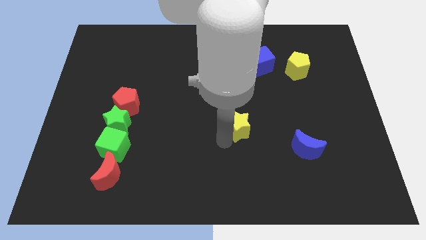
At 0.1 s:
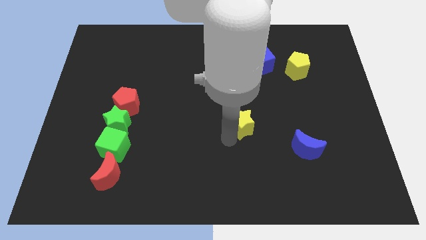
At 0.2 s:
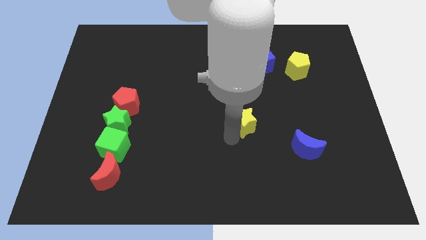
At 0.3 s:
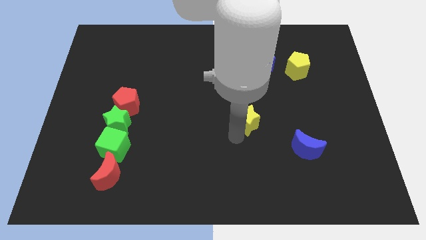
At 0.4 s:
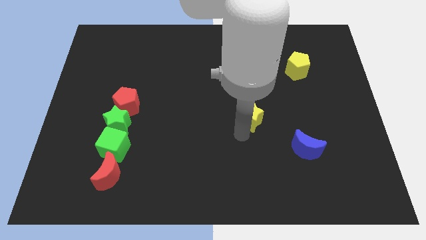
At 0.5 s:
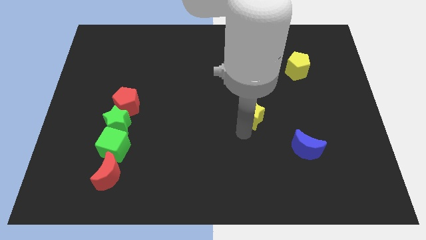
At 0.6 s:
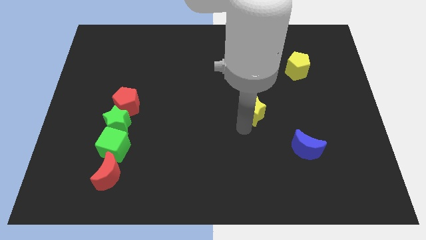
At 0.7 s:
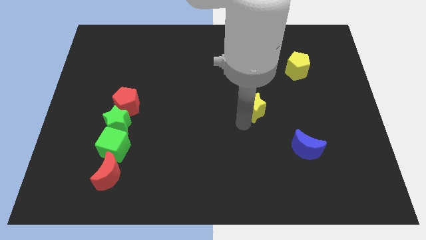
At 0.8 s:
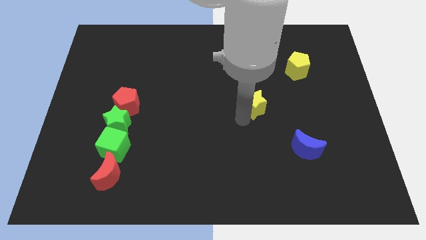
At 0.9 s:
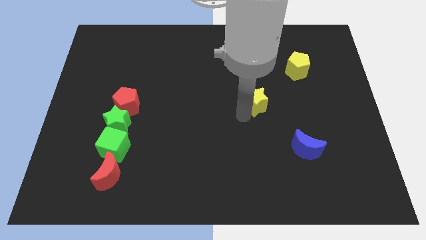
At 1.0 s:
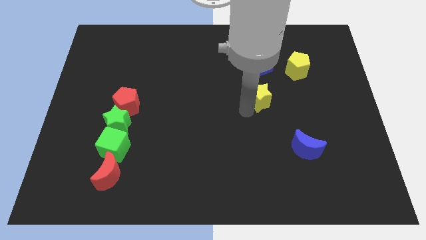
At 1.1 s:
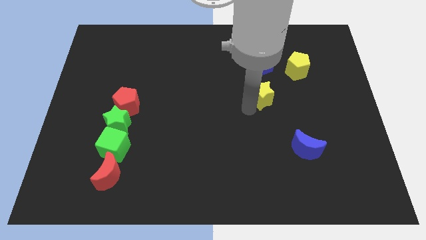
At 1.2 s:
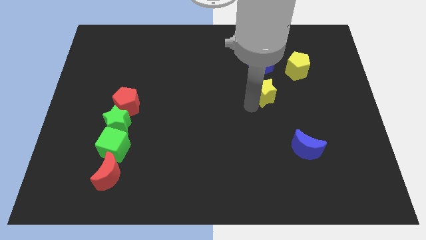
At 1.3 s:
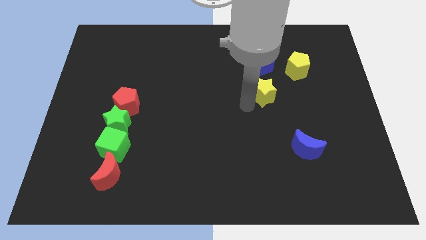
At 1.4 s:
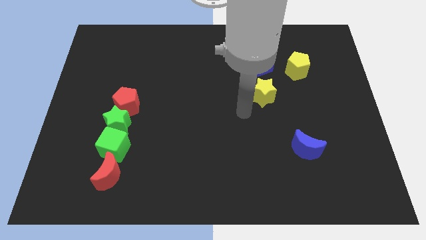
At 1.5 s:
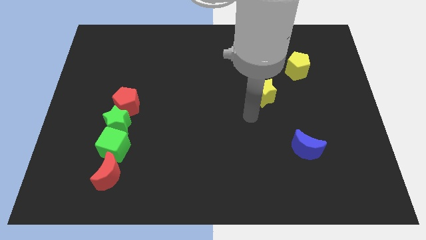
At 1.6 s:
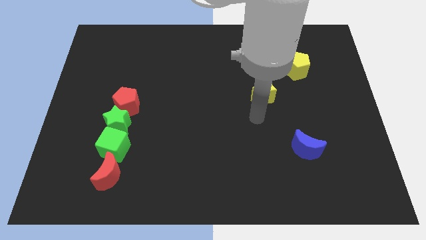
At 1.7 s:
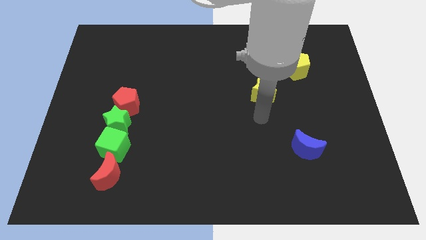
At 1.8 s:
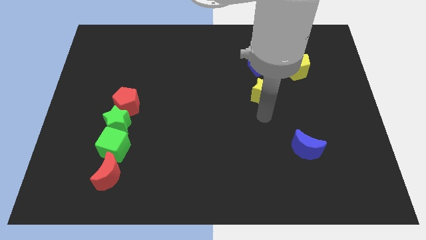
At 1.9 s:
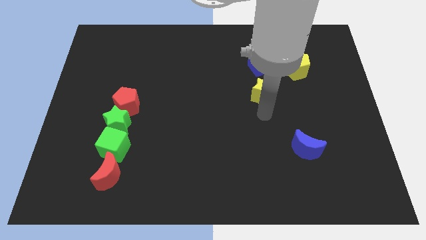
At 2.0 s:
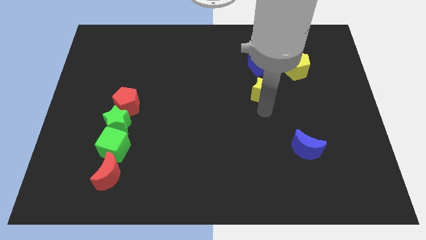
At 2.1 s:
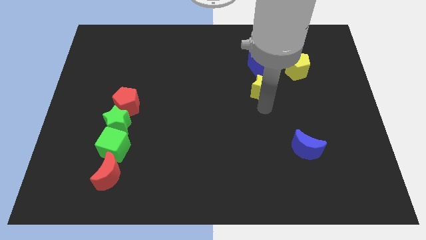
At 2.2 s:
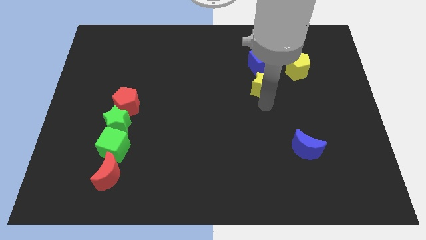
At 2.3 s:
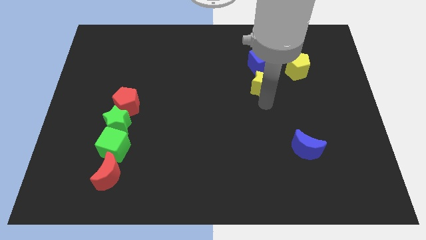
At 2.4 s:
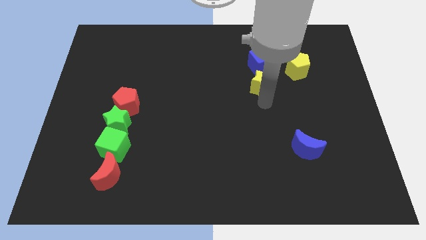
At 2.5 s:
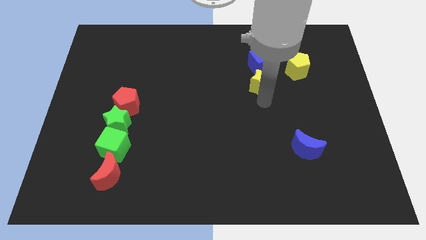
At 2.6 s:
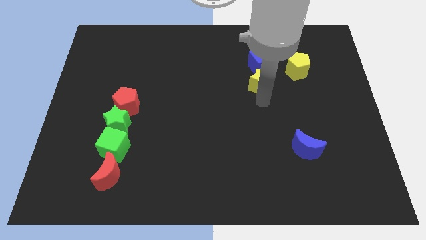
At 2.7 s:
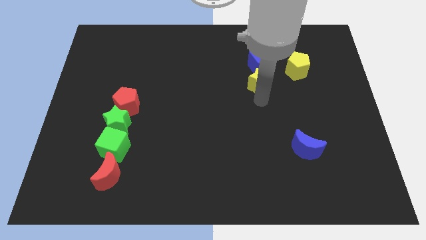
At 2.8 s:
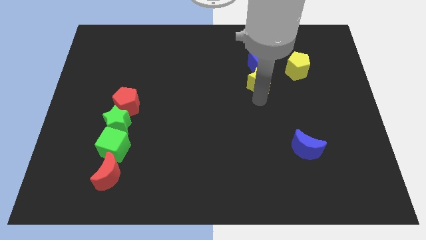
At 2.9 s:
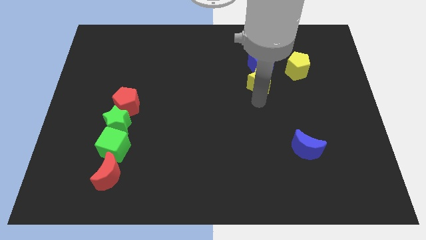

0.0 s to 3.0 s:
move the yellow star to the bottom of the blue cube

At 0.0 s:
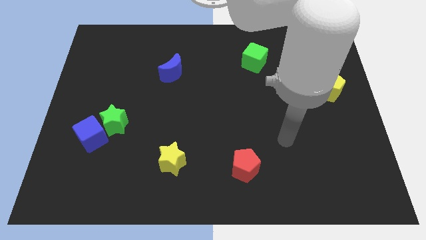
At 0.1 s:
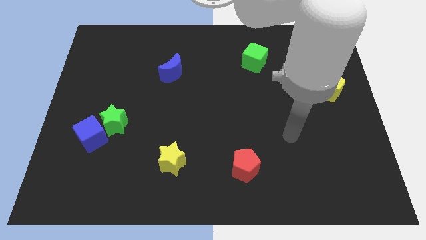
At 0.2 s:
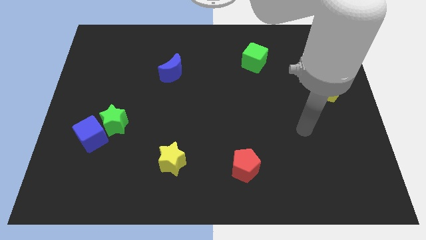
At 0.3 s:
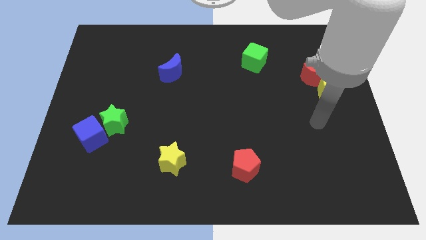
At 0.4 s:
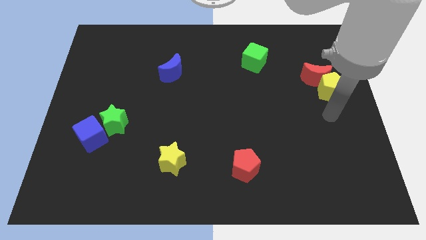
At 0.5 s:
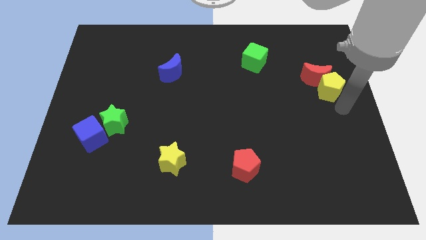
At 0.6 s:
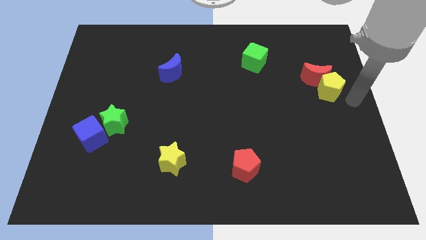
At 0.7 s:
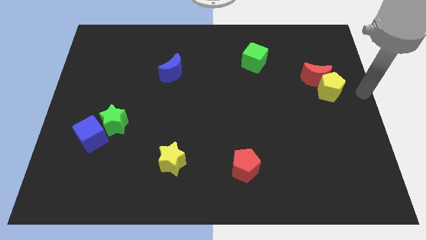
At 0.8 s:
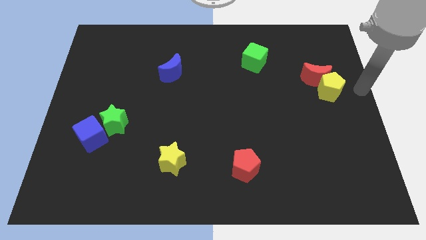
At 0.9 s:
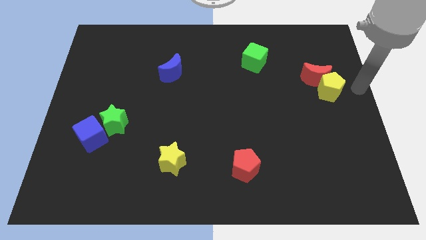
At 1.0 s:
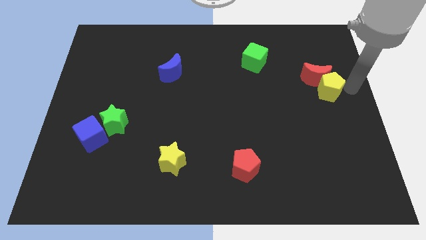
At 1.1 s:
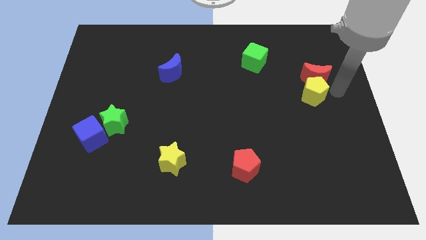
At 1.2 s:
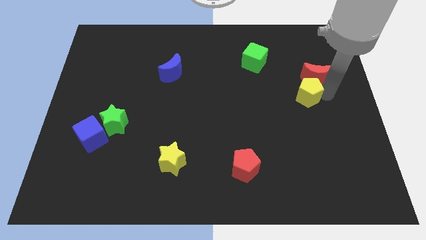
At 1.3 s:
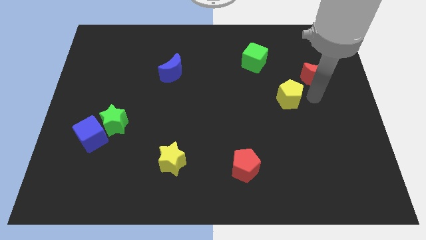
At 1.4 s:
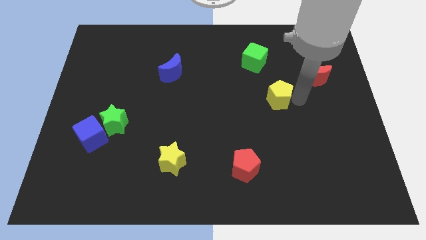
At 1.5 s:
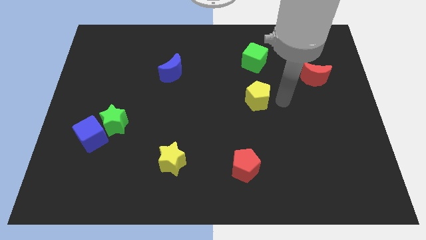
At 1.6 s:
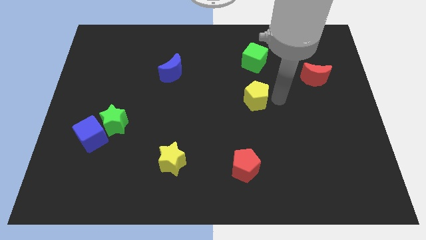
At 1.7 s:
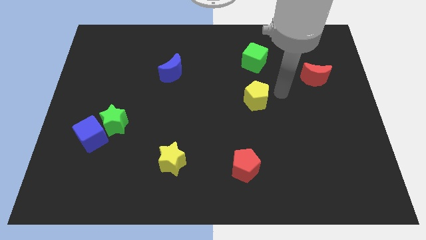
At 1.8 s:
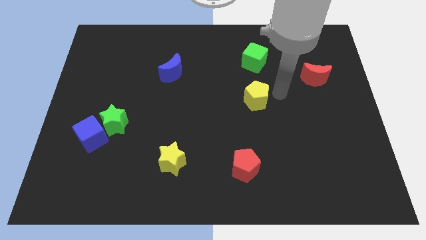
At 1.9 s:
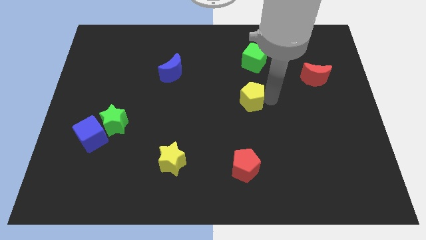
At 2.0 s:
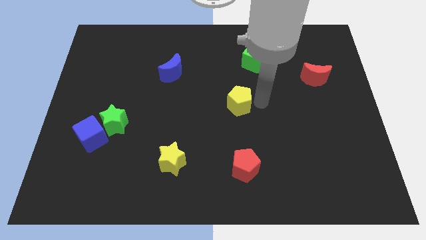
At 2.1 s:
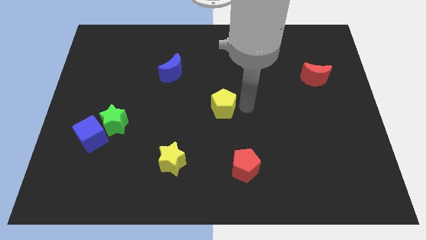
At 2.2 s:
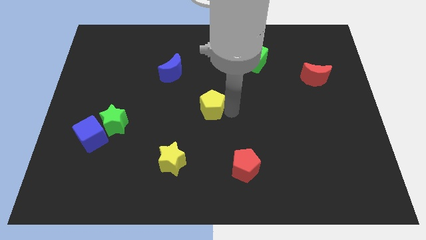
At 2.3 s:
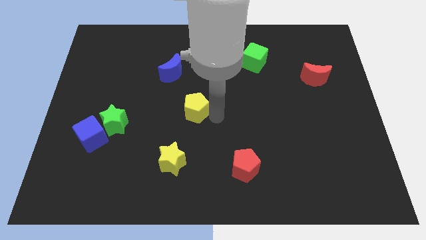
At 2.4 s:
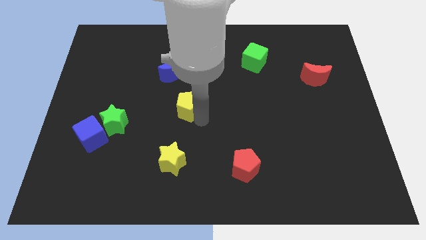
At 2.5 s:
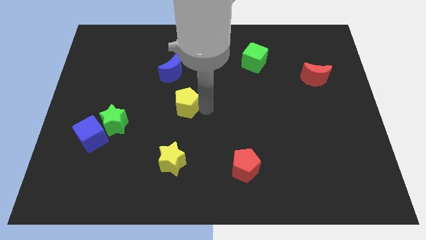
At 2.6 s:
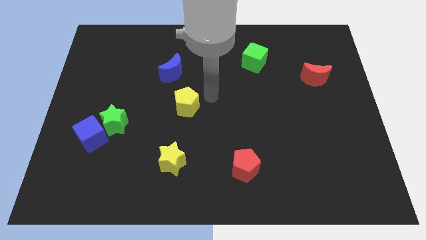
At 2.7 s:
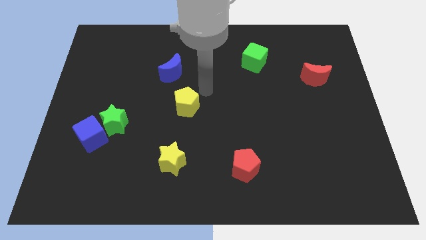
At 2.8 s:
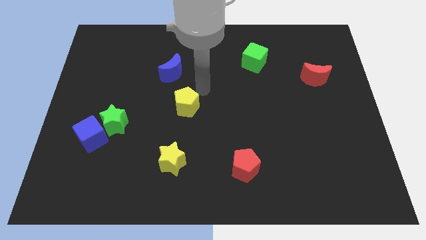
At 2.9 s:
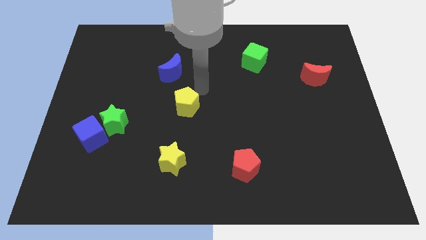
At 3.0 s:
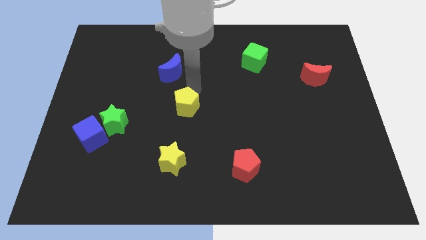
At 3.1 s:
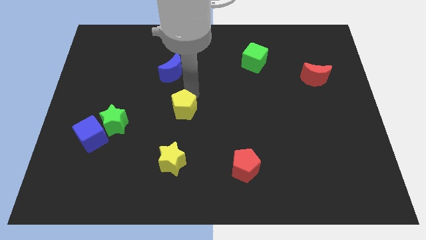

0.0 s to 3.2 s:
place the yellow pentagon in between the blue moon and red pentagon

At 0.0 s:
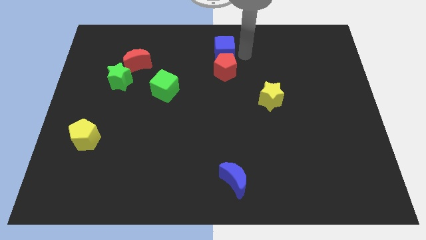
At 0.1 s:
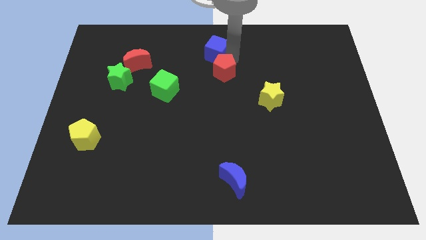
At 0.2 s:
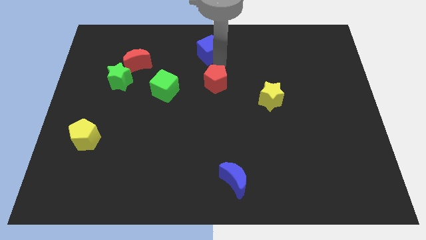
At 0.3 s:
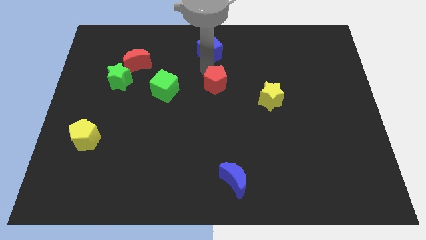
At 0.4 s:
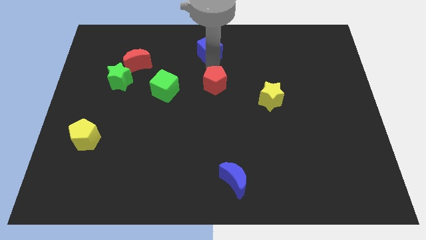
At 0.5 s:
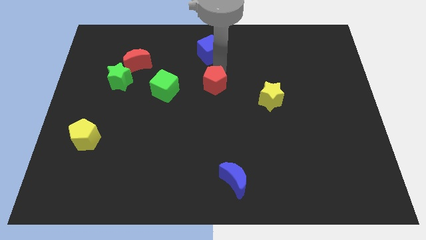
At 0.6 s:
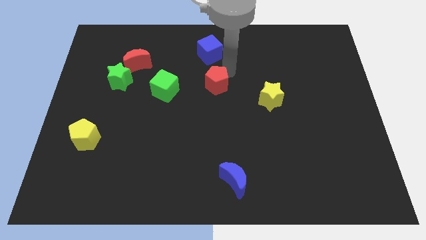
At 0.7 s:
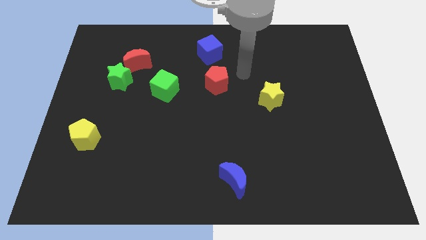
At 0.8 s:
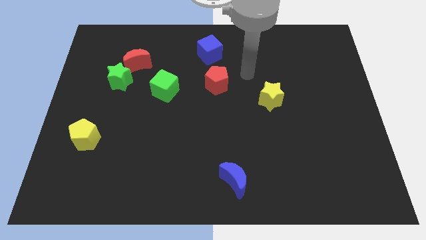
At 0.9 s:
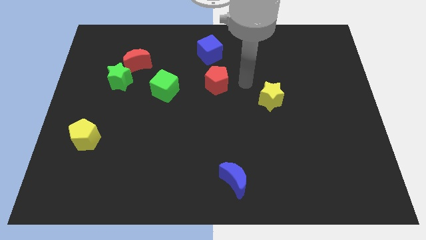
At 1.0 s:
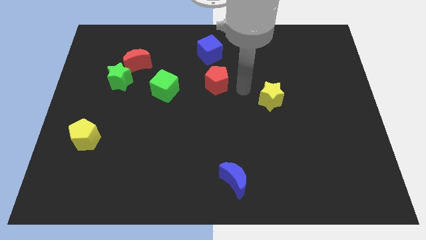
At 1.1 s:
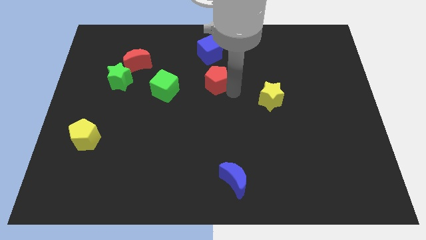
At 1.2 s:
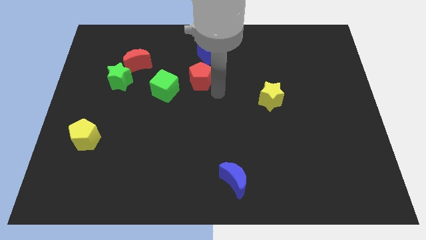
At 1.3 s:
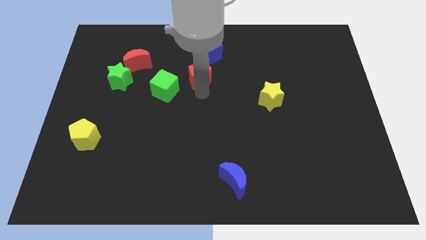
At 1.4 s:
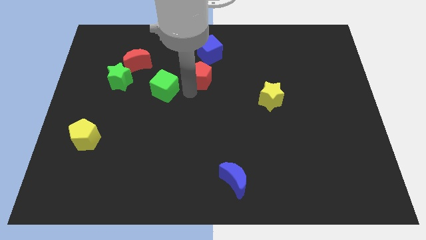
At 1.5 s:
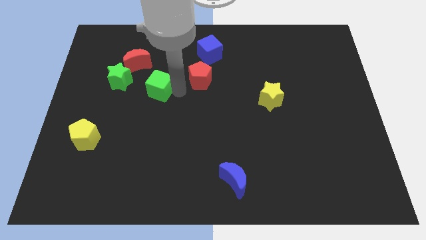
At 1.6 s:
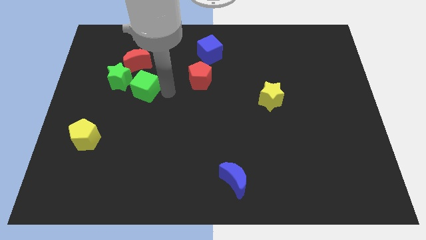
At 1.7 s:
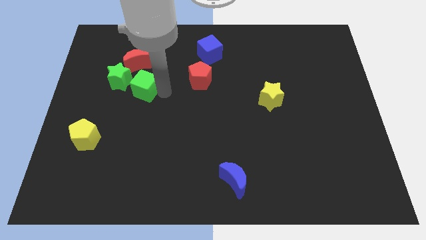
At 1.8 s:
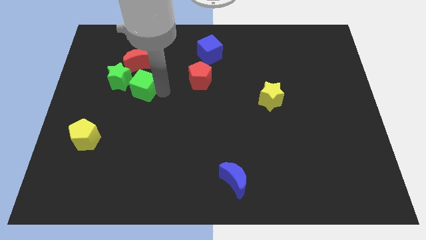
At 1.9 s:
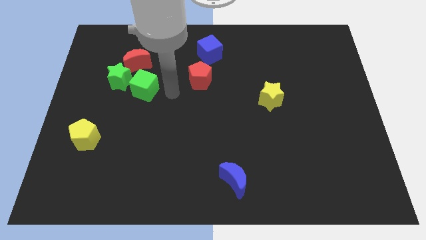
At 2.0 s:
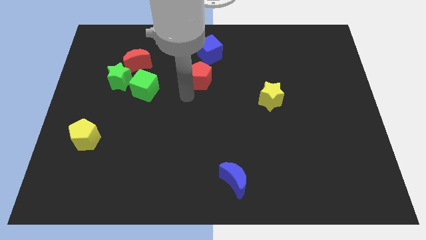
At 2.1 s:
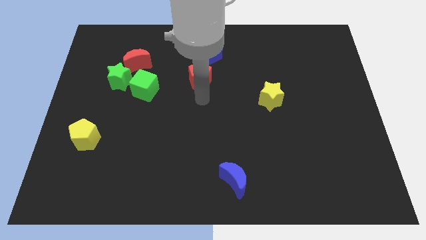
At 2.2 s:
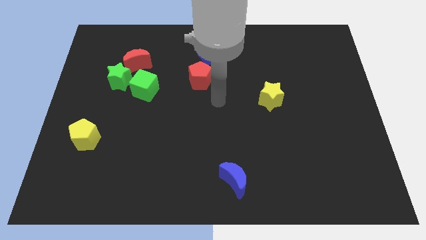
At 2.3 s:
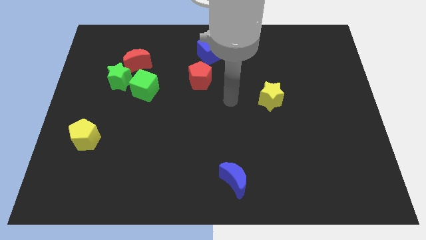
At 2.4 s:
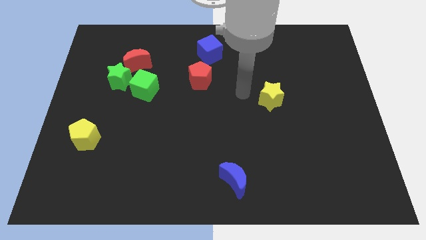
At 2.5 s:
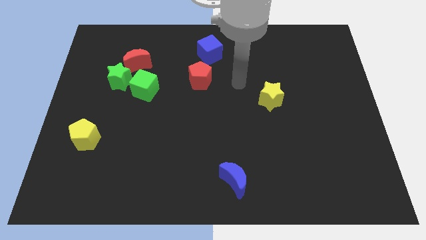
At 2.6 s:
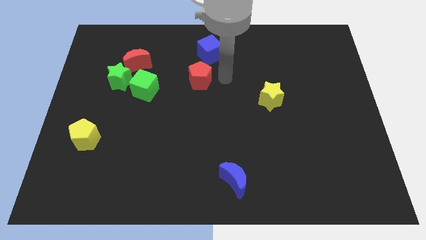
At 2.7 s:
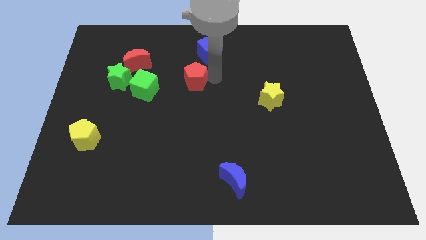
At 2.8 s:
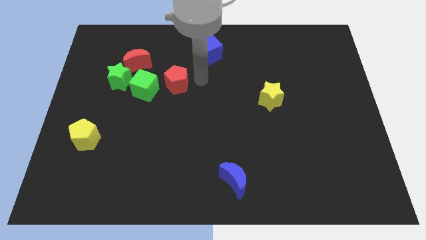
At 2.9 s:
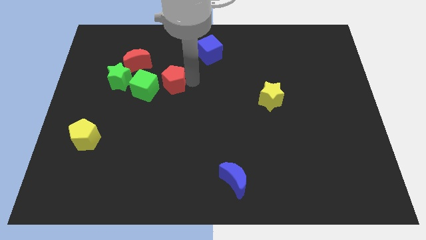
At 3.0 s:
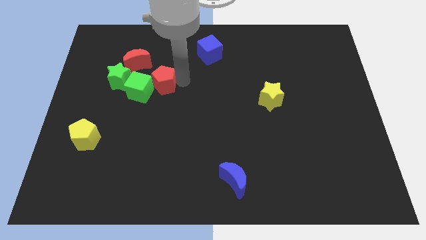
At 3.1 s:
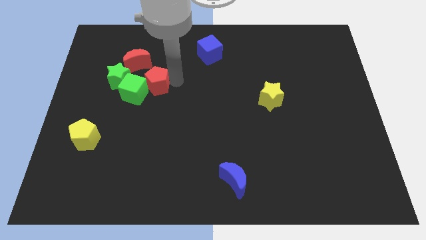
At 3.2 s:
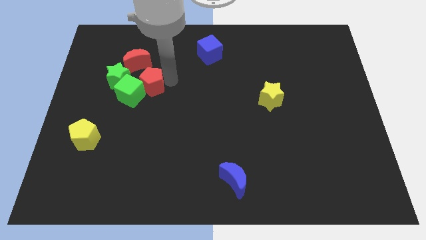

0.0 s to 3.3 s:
move the red pentagon into the green cube
